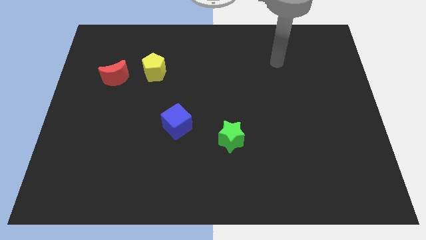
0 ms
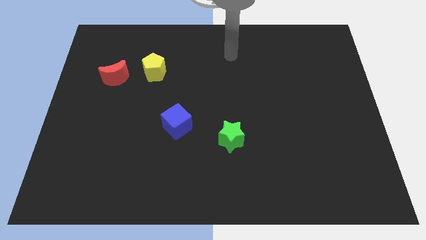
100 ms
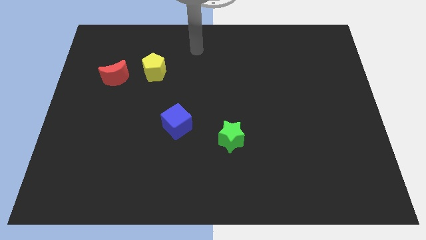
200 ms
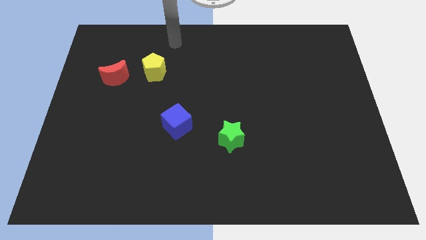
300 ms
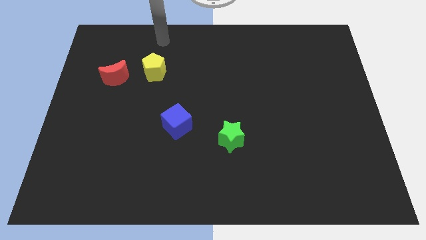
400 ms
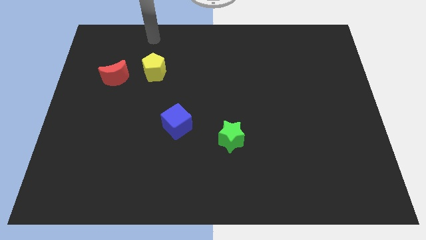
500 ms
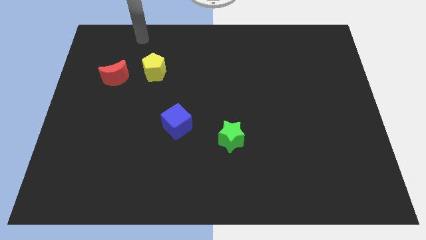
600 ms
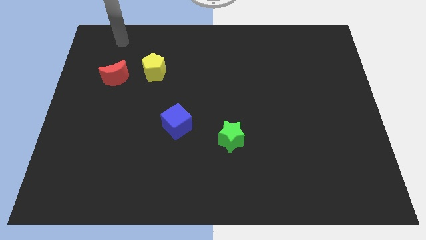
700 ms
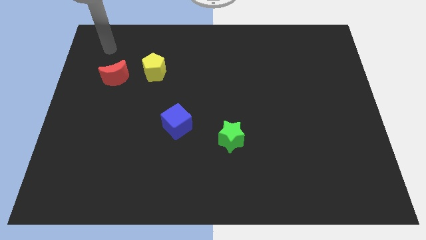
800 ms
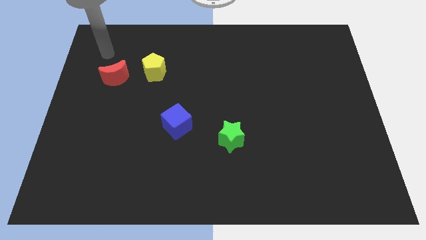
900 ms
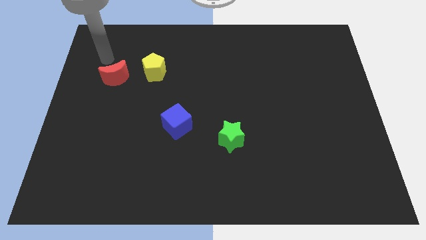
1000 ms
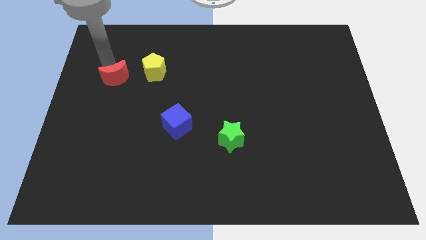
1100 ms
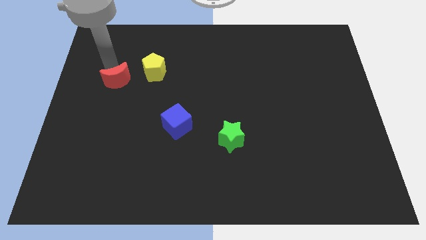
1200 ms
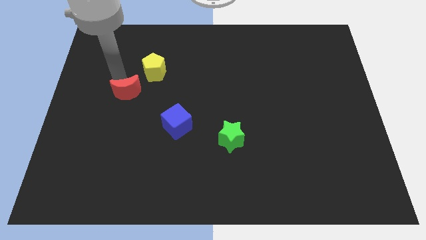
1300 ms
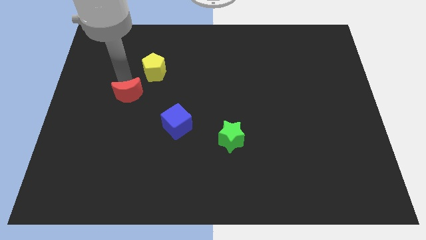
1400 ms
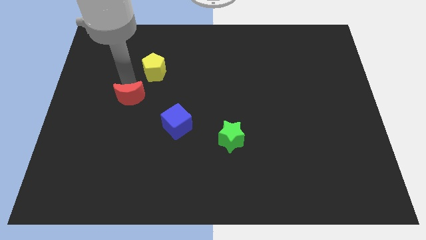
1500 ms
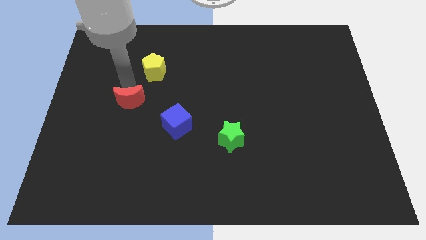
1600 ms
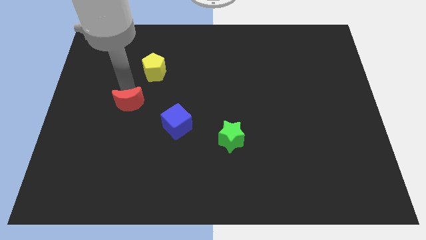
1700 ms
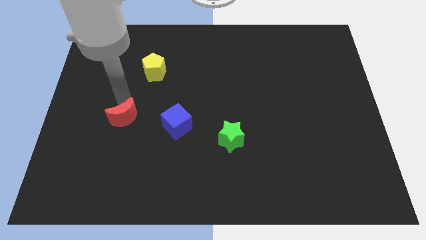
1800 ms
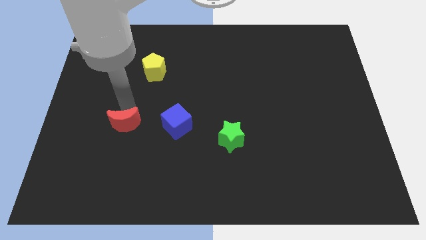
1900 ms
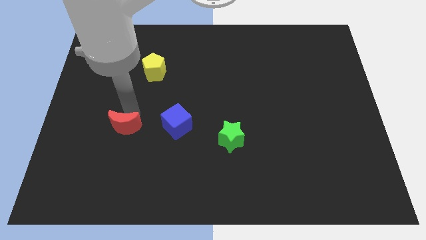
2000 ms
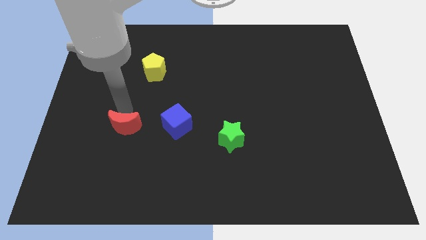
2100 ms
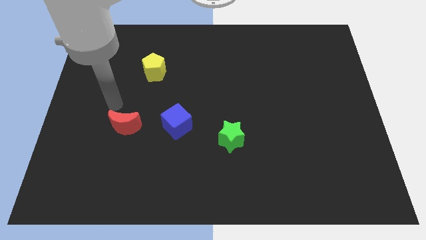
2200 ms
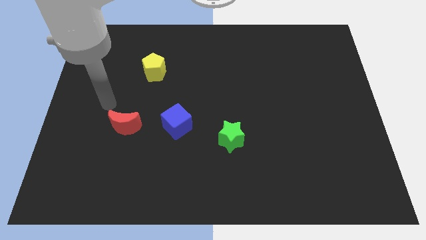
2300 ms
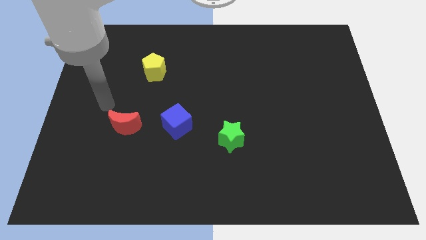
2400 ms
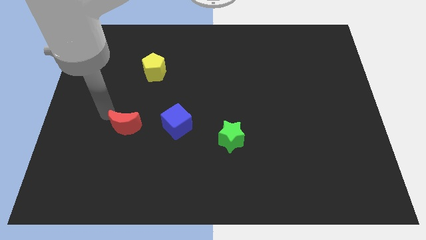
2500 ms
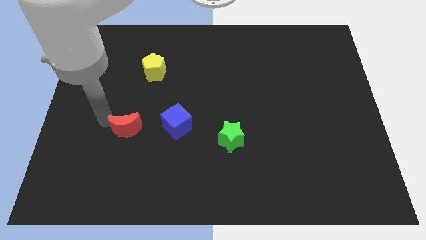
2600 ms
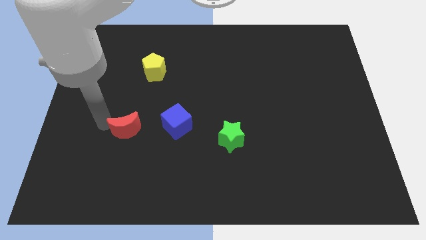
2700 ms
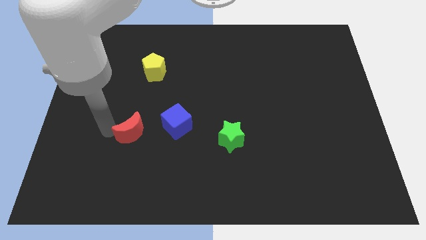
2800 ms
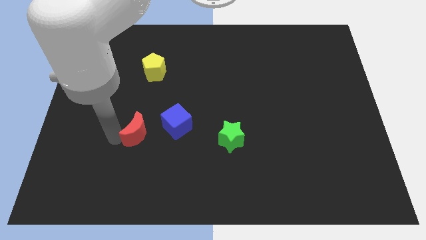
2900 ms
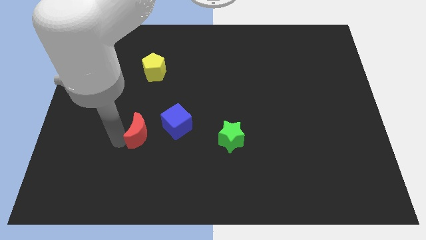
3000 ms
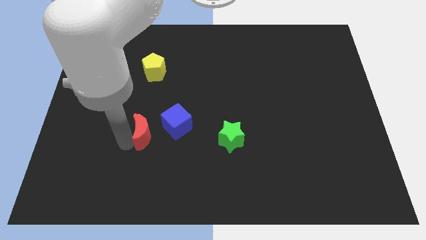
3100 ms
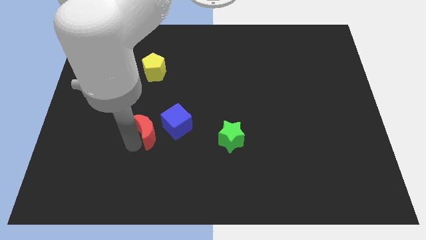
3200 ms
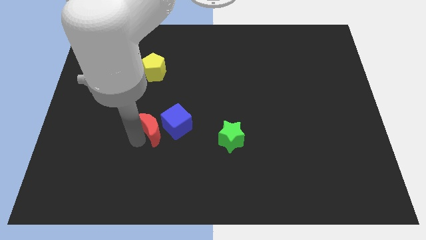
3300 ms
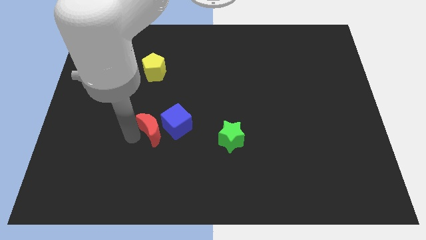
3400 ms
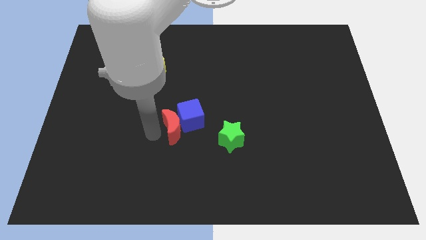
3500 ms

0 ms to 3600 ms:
put the moon to the blue block

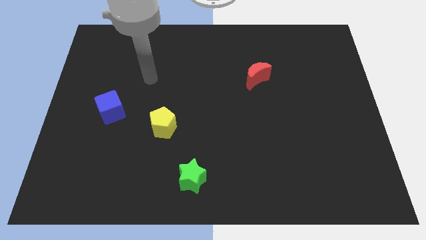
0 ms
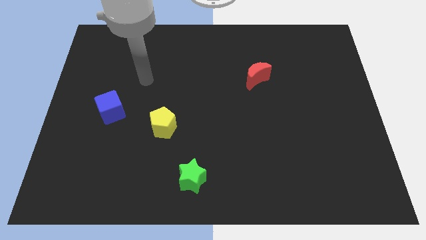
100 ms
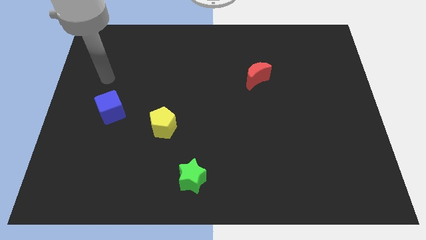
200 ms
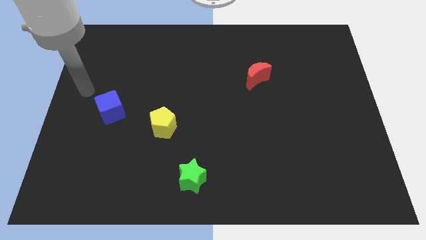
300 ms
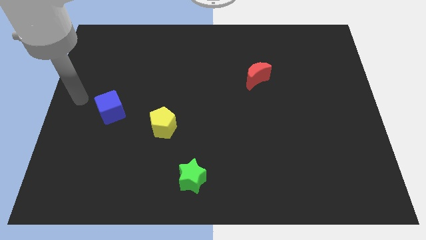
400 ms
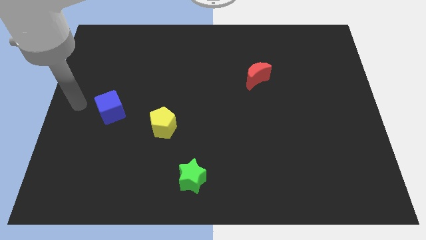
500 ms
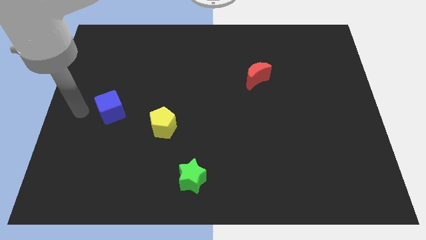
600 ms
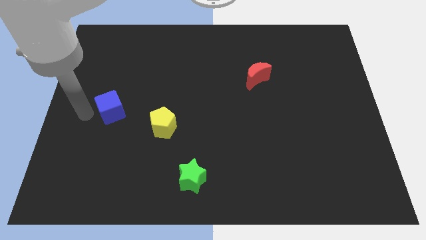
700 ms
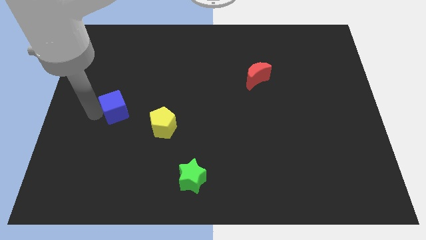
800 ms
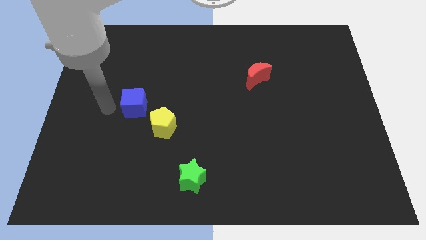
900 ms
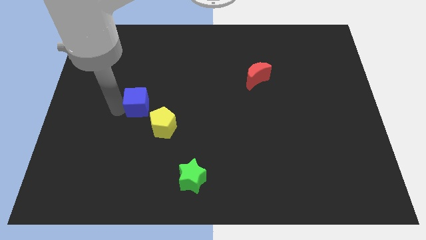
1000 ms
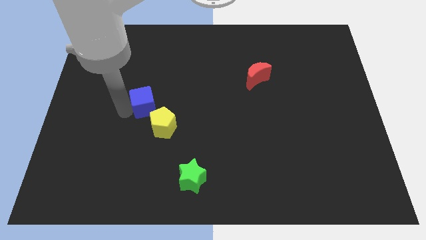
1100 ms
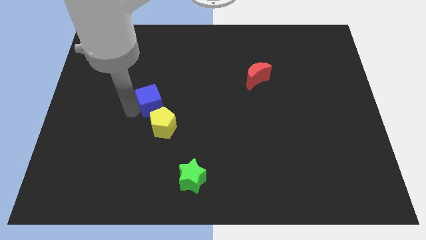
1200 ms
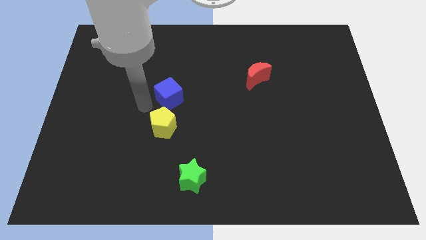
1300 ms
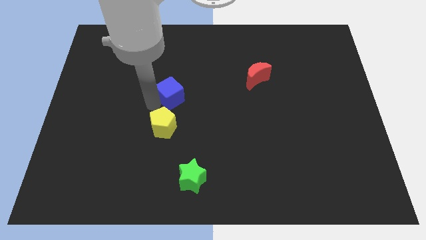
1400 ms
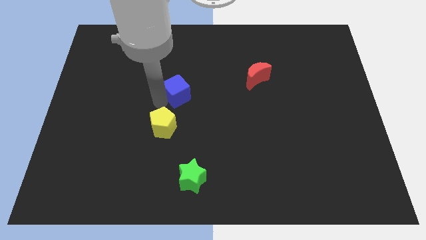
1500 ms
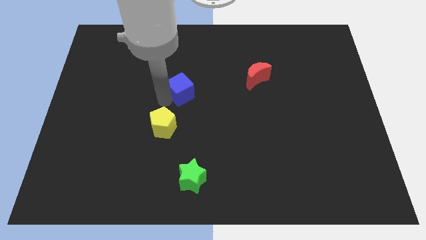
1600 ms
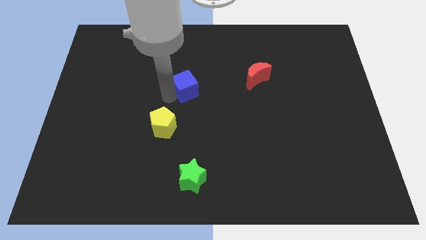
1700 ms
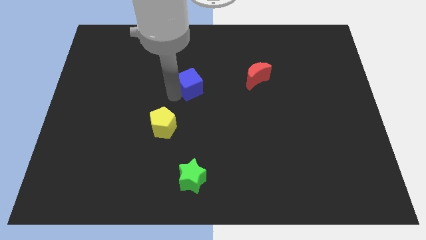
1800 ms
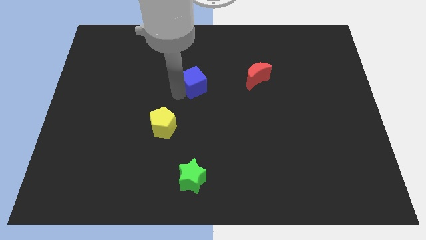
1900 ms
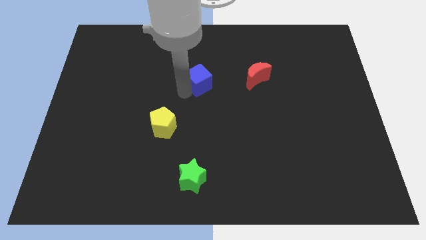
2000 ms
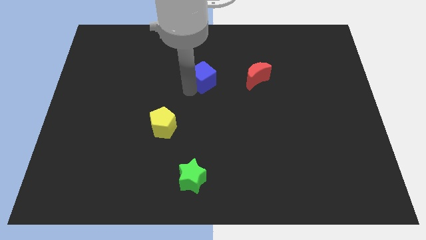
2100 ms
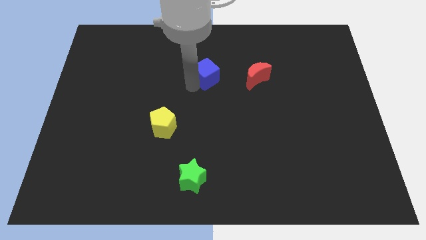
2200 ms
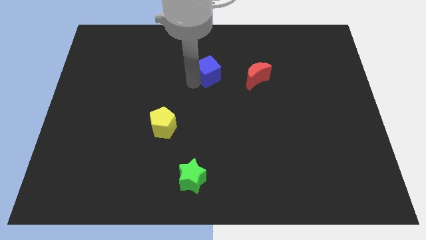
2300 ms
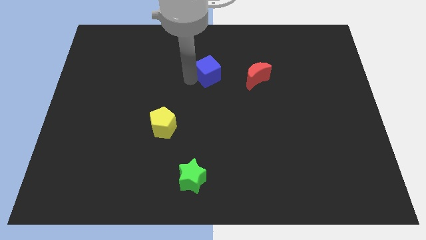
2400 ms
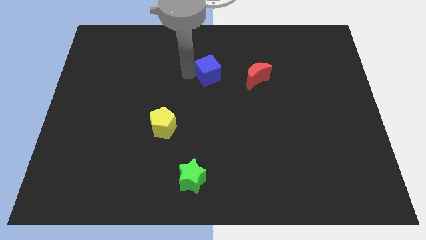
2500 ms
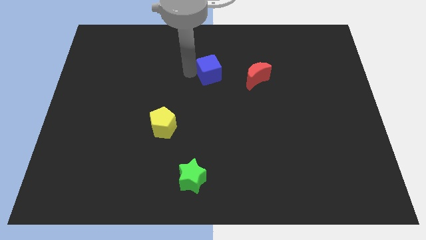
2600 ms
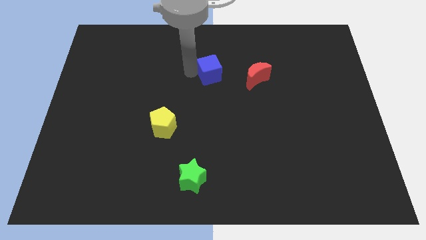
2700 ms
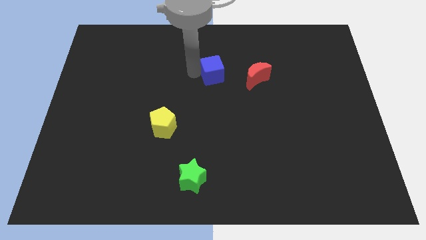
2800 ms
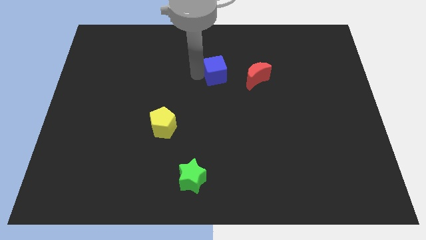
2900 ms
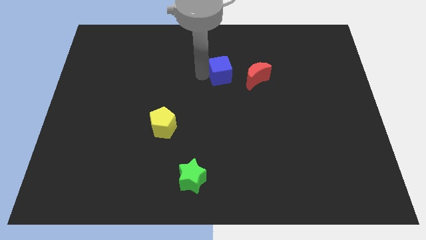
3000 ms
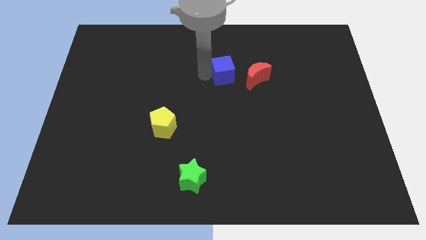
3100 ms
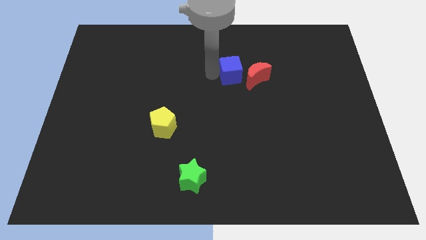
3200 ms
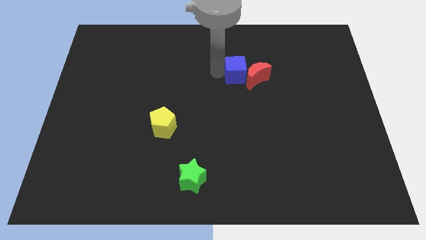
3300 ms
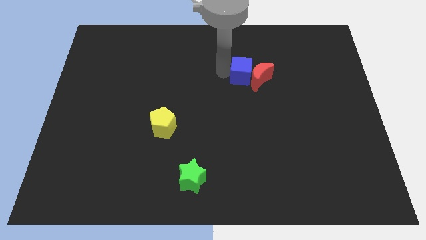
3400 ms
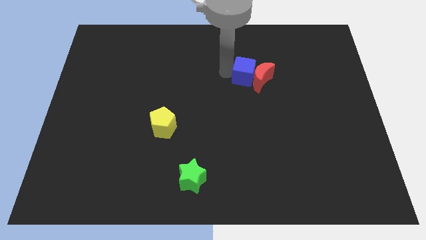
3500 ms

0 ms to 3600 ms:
put the cube towards the moon

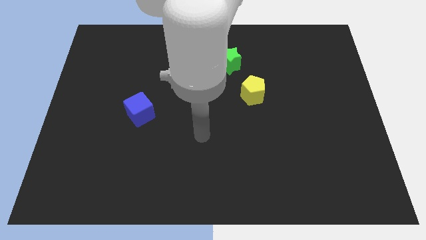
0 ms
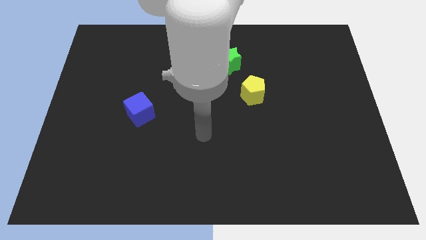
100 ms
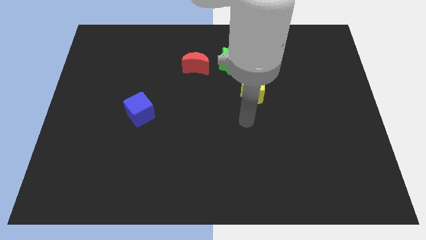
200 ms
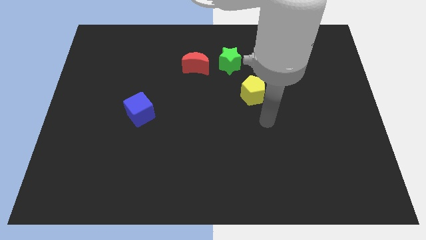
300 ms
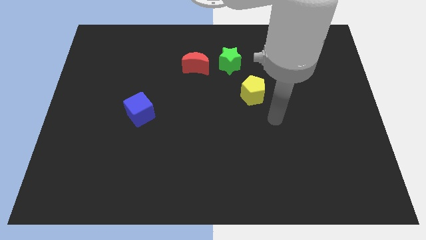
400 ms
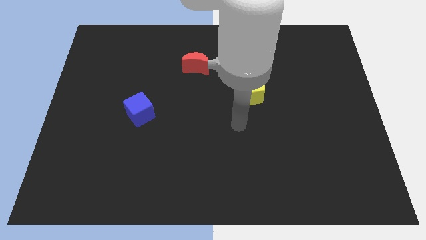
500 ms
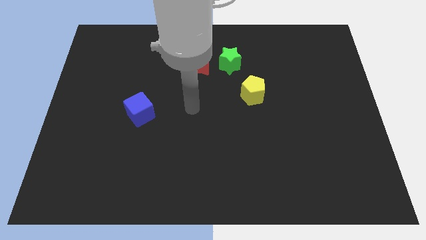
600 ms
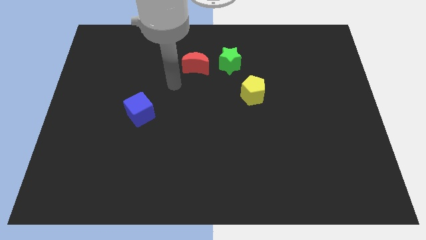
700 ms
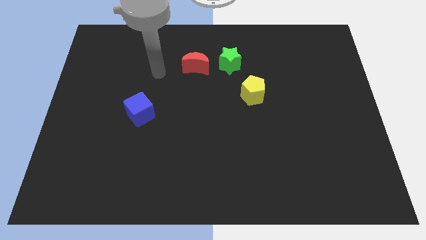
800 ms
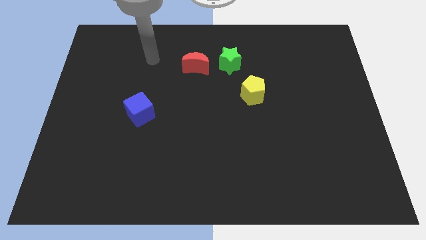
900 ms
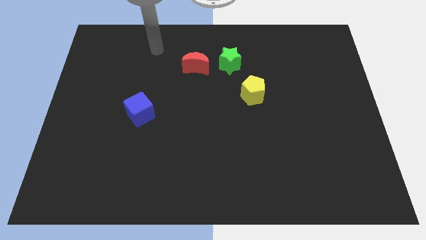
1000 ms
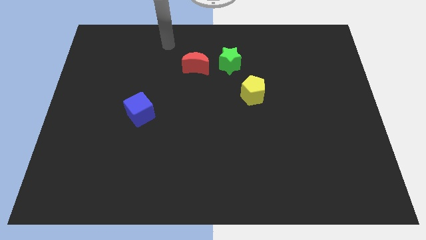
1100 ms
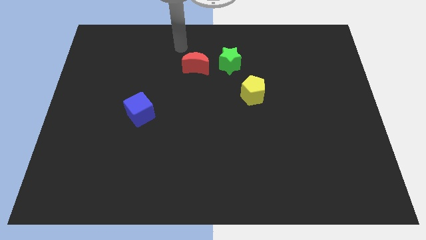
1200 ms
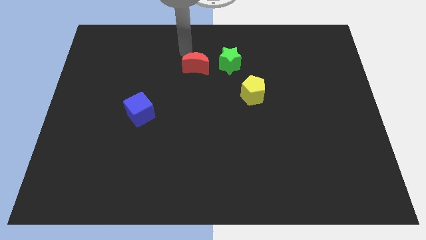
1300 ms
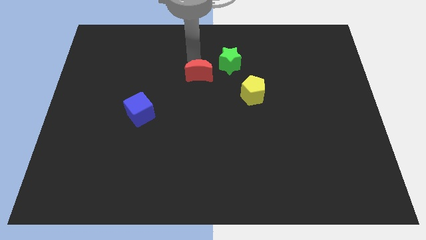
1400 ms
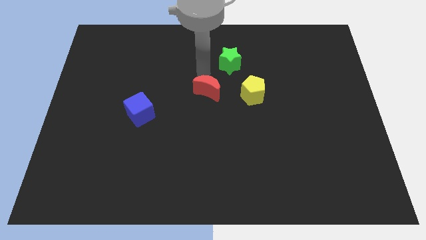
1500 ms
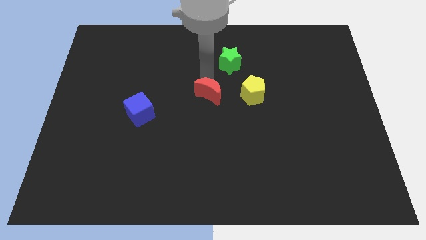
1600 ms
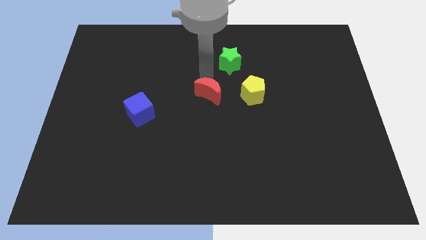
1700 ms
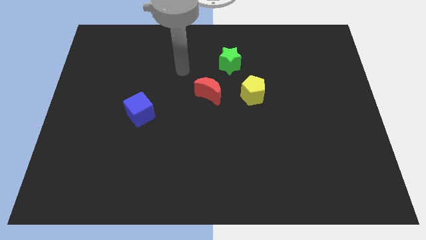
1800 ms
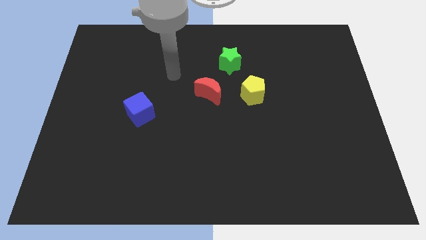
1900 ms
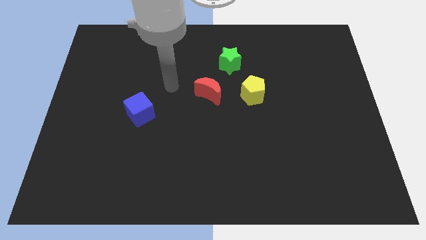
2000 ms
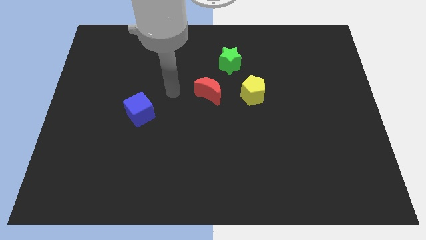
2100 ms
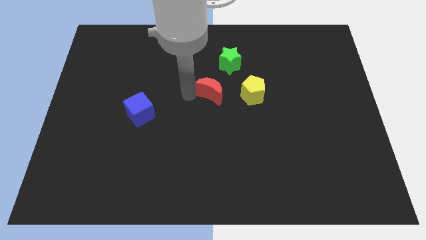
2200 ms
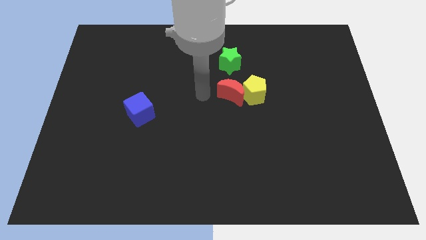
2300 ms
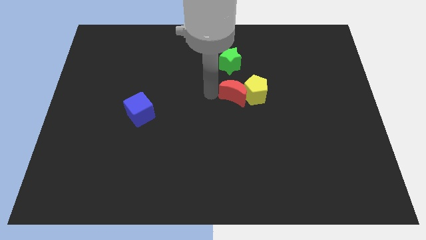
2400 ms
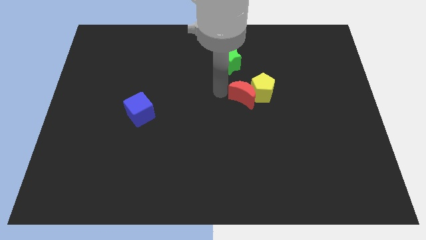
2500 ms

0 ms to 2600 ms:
slide the red moon towards the pentagon
